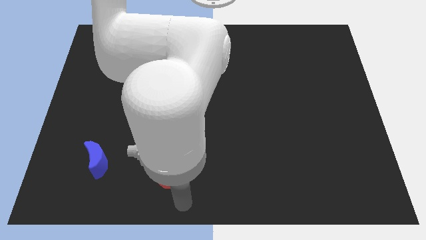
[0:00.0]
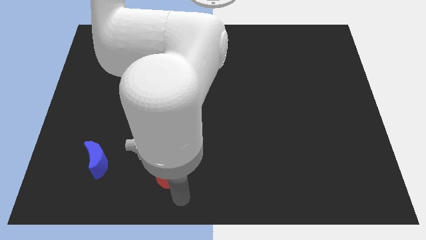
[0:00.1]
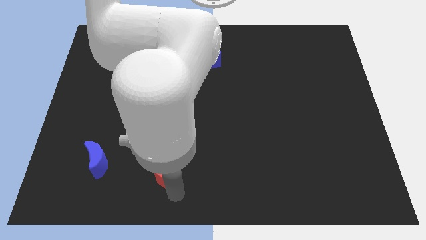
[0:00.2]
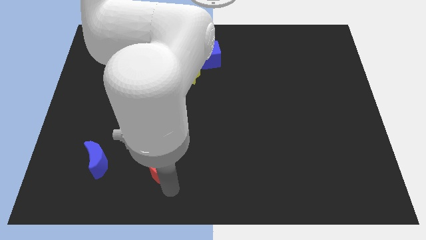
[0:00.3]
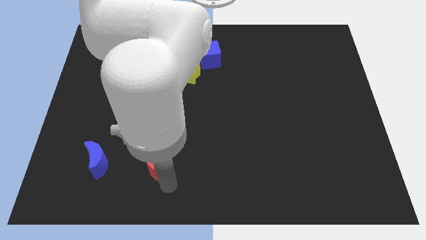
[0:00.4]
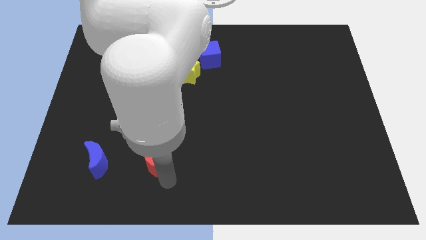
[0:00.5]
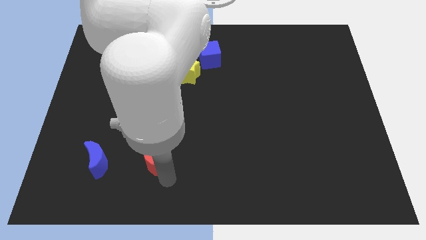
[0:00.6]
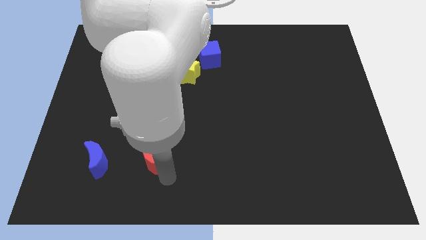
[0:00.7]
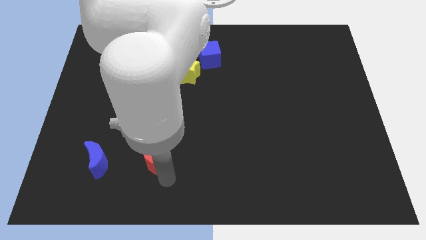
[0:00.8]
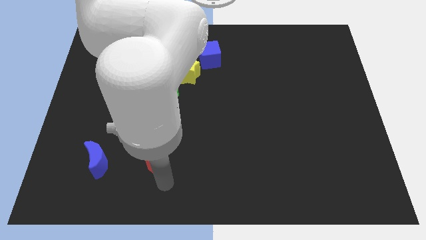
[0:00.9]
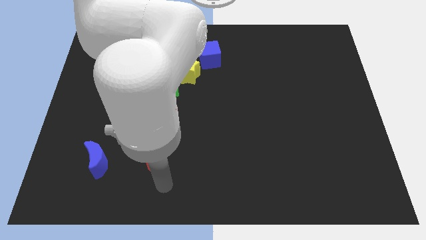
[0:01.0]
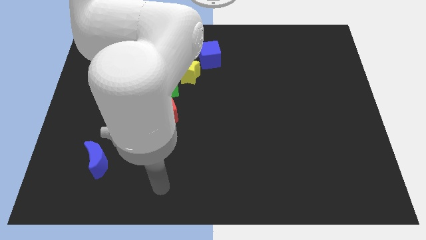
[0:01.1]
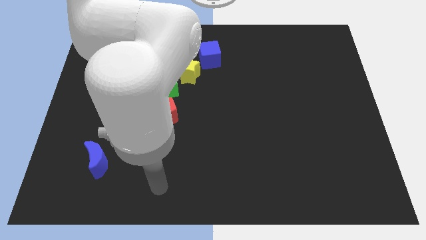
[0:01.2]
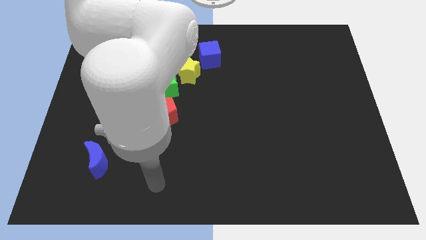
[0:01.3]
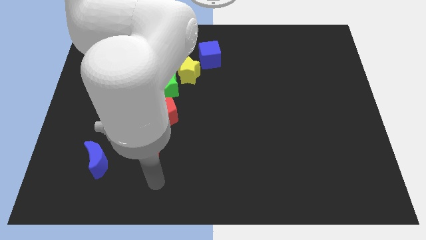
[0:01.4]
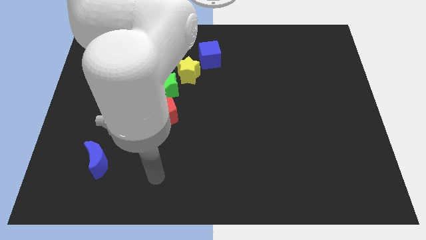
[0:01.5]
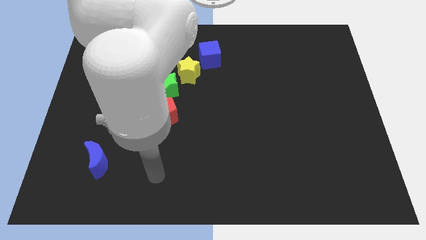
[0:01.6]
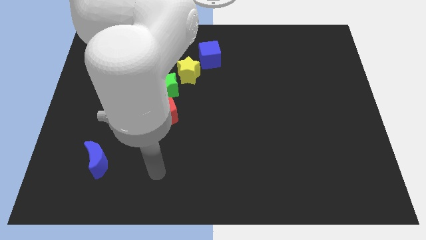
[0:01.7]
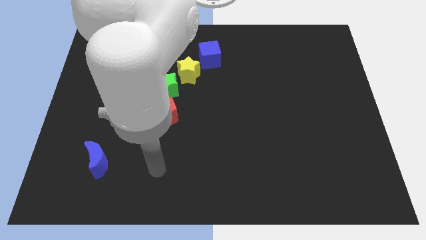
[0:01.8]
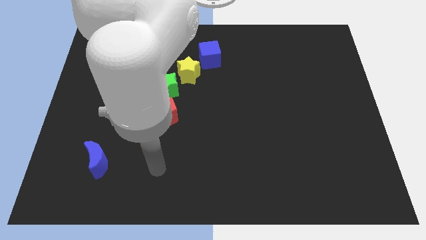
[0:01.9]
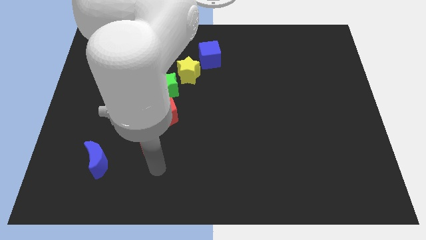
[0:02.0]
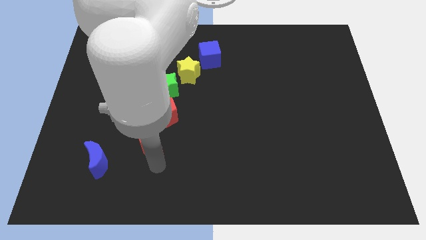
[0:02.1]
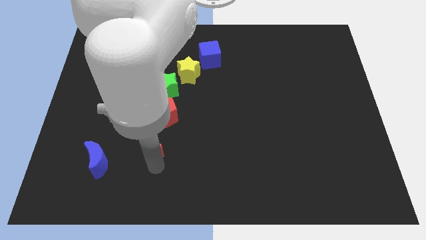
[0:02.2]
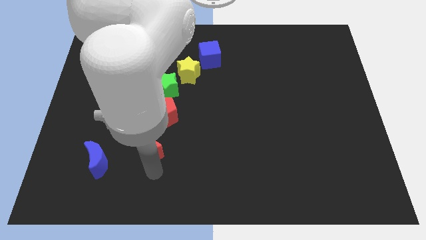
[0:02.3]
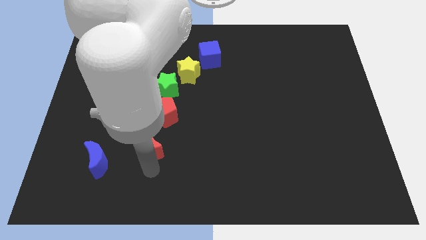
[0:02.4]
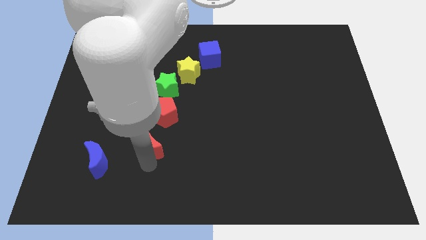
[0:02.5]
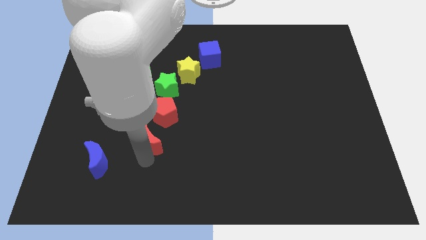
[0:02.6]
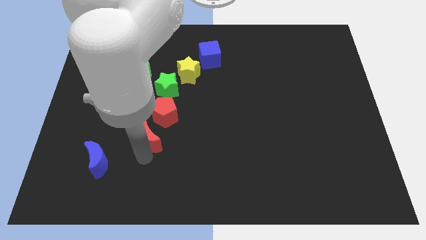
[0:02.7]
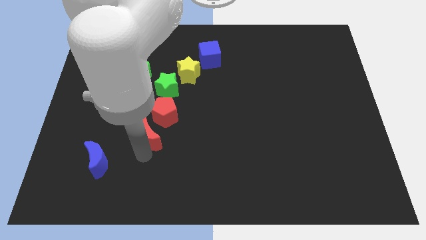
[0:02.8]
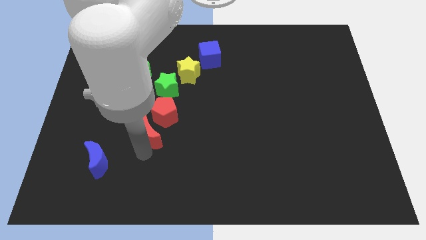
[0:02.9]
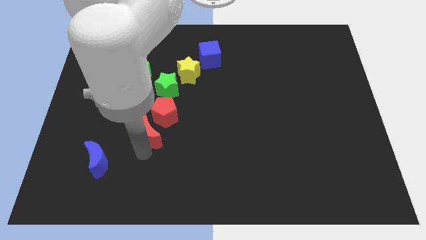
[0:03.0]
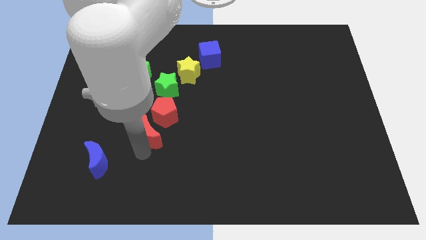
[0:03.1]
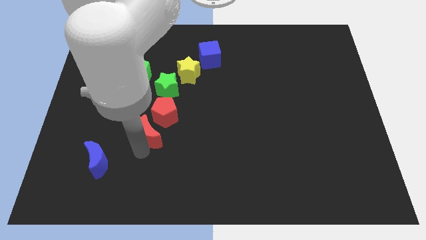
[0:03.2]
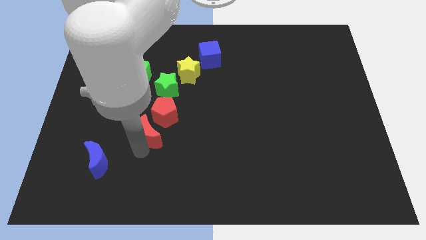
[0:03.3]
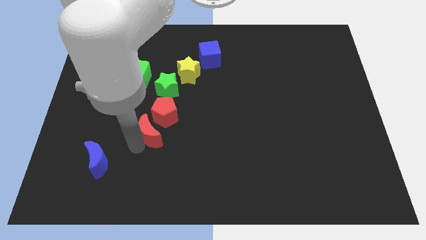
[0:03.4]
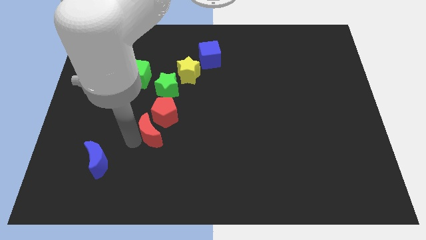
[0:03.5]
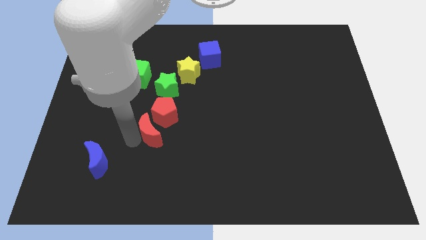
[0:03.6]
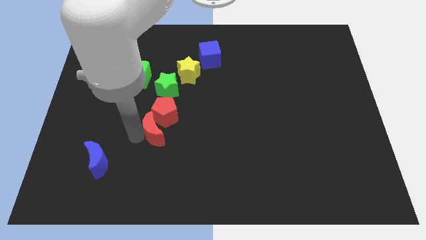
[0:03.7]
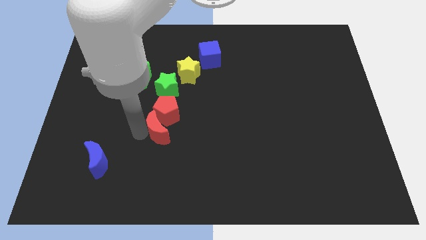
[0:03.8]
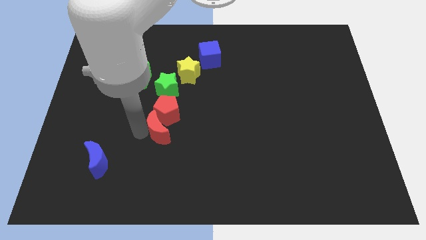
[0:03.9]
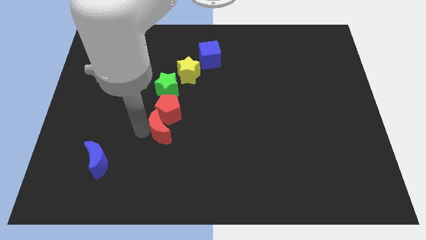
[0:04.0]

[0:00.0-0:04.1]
slide red moon into red pentagon

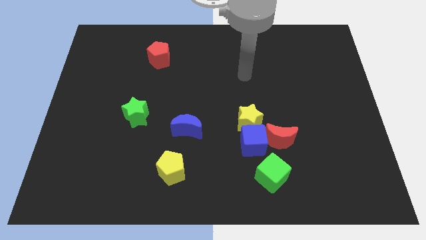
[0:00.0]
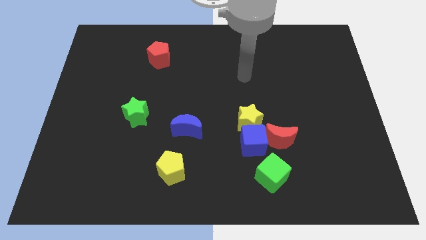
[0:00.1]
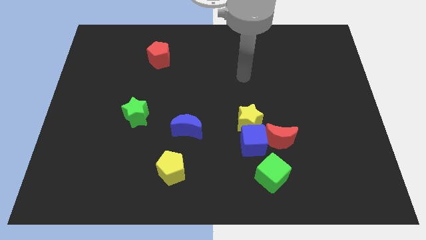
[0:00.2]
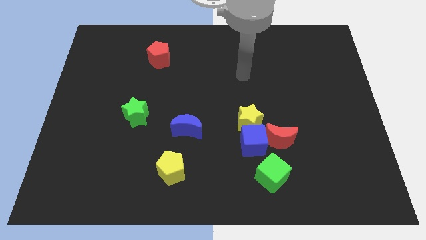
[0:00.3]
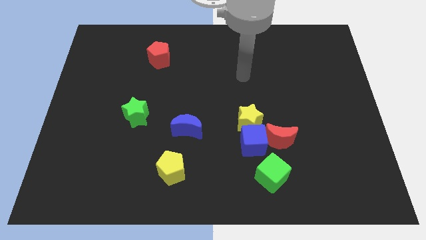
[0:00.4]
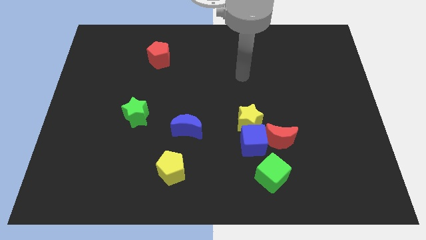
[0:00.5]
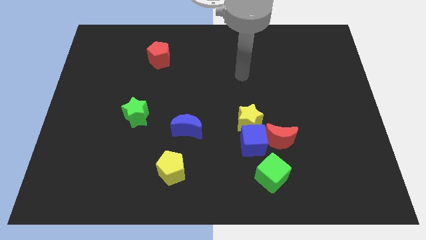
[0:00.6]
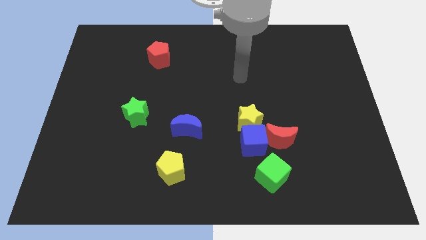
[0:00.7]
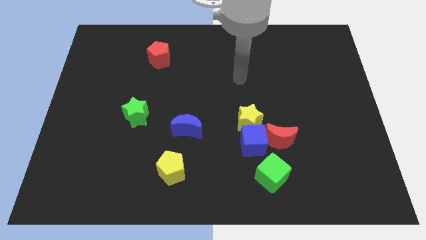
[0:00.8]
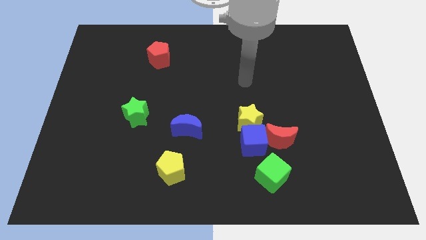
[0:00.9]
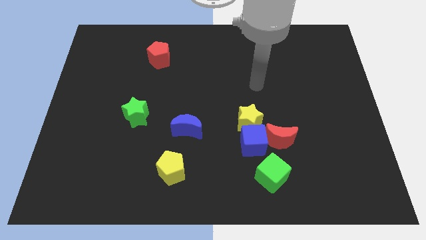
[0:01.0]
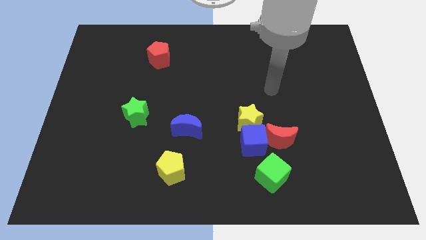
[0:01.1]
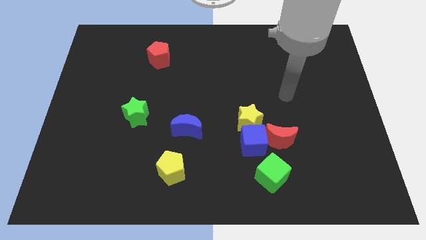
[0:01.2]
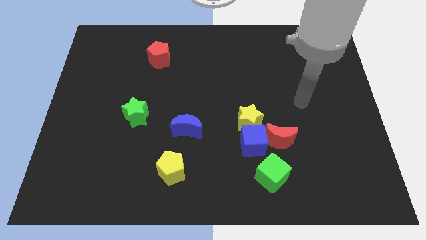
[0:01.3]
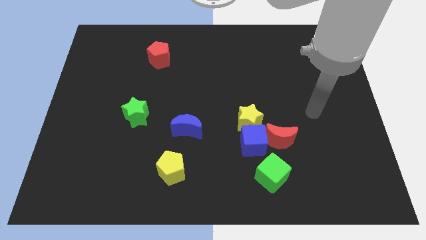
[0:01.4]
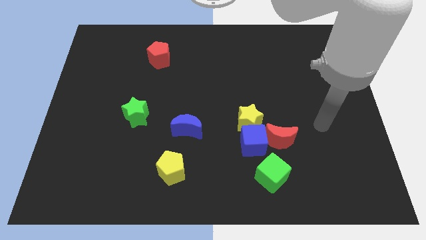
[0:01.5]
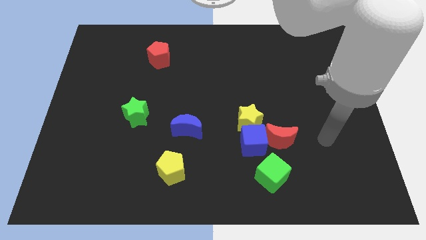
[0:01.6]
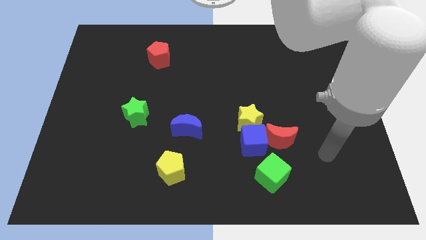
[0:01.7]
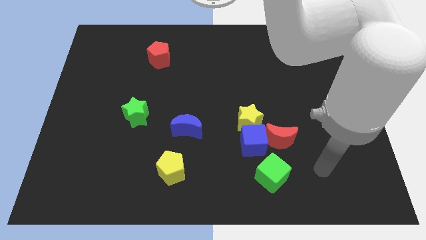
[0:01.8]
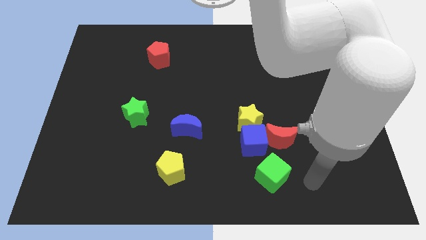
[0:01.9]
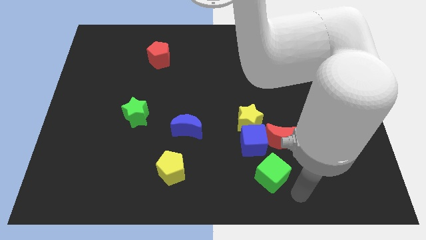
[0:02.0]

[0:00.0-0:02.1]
place the arm below the green cube

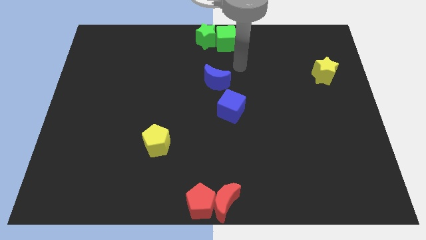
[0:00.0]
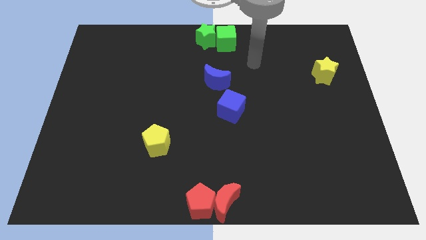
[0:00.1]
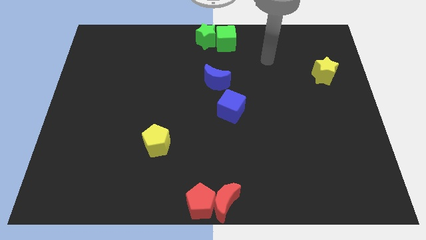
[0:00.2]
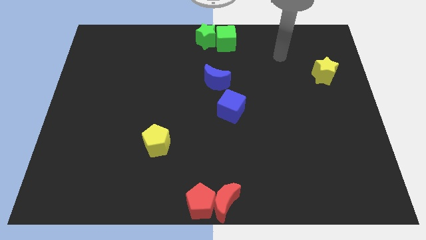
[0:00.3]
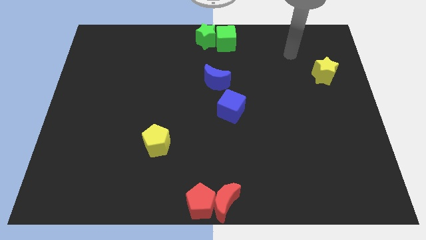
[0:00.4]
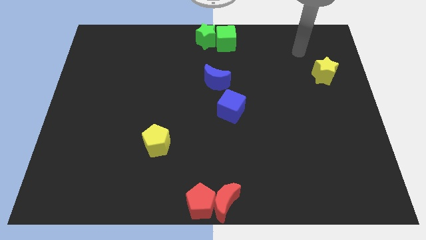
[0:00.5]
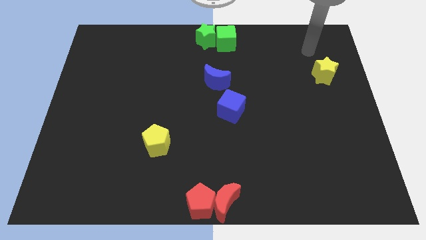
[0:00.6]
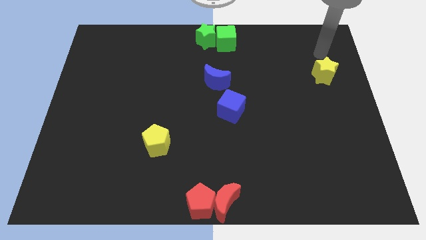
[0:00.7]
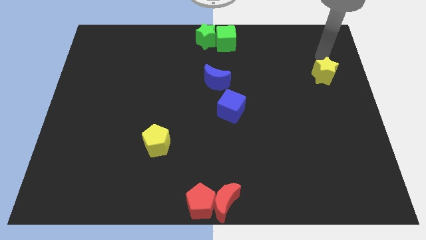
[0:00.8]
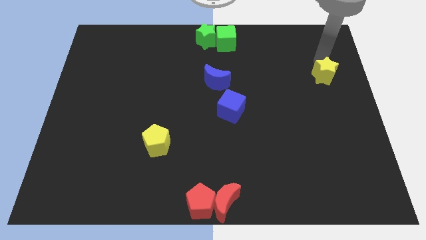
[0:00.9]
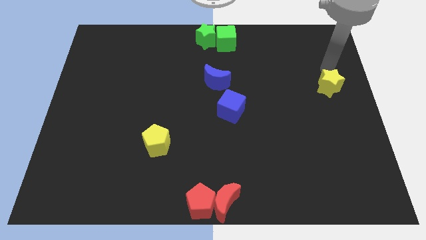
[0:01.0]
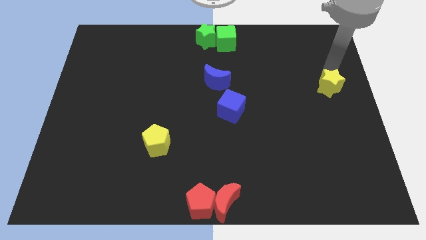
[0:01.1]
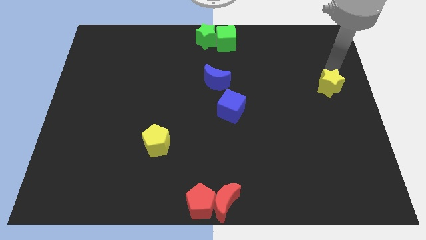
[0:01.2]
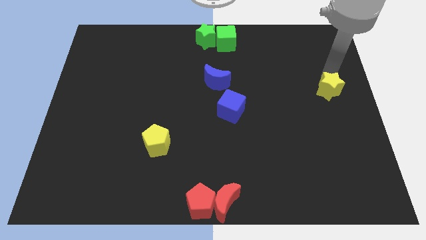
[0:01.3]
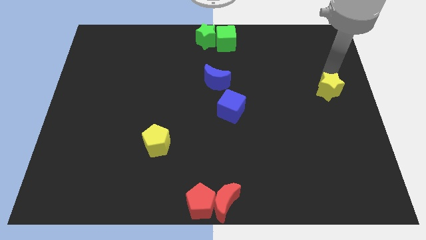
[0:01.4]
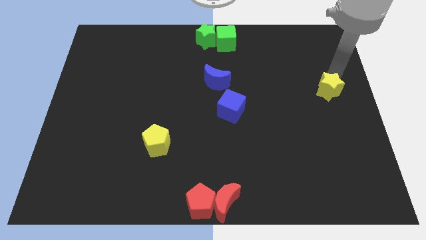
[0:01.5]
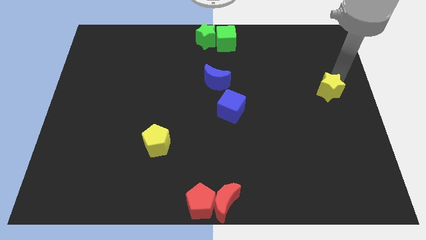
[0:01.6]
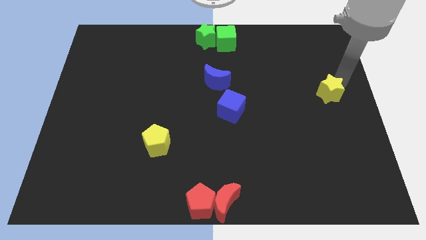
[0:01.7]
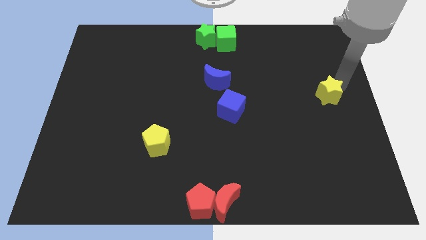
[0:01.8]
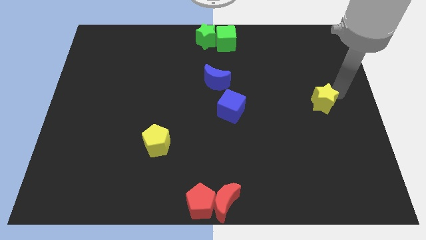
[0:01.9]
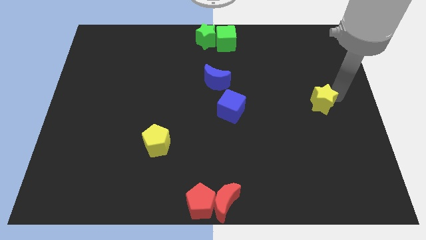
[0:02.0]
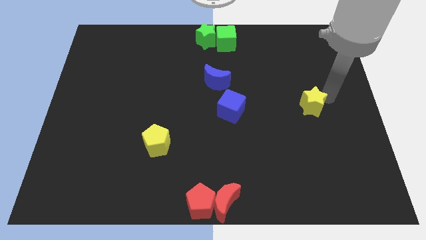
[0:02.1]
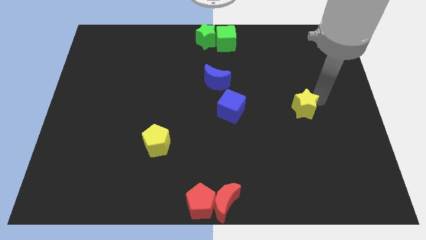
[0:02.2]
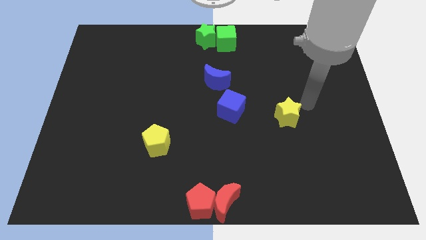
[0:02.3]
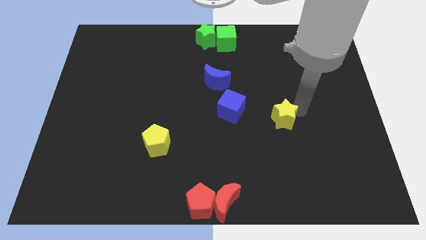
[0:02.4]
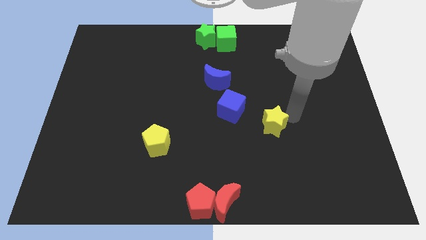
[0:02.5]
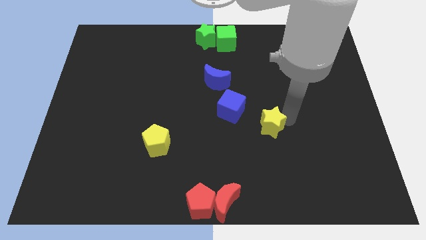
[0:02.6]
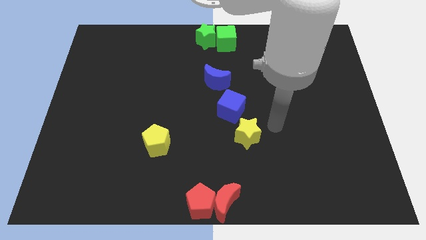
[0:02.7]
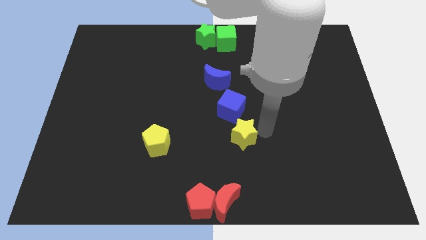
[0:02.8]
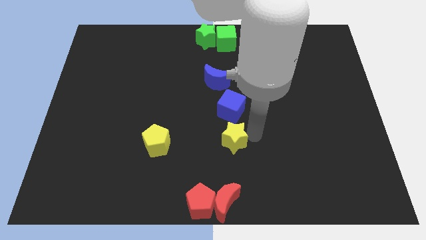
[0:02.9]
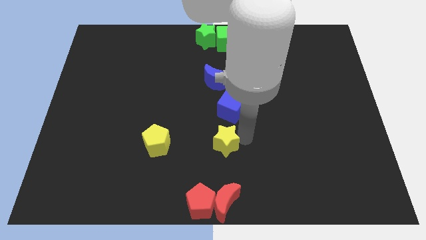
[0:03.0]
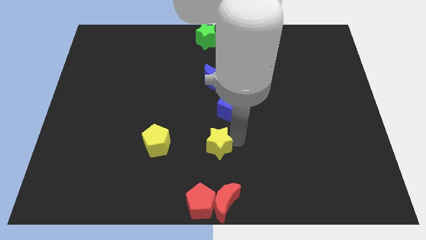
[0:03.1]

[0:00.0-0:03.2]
place the yellow star right to the yellow pentagon
